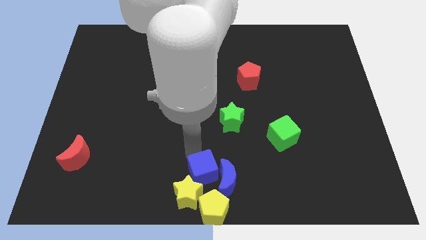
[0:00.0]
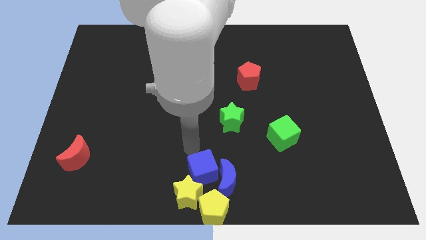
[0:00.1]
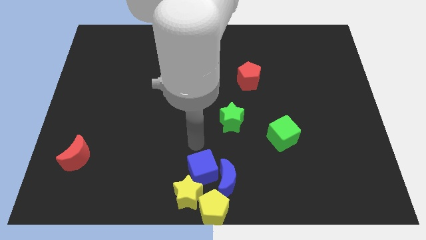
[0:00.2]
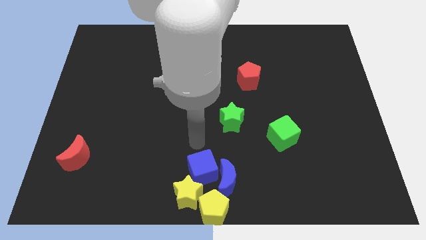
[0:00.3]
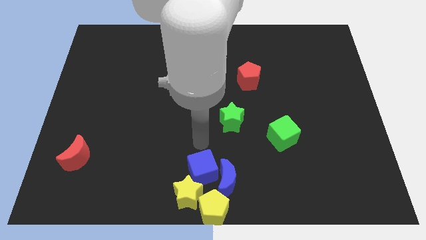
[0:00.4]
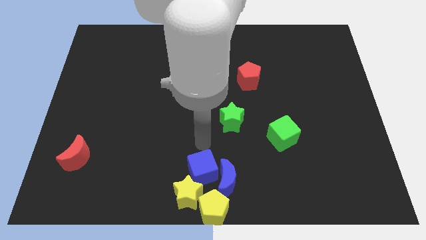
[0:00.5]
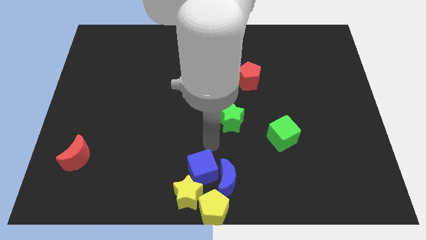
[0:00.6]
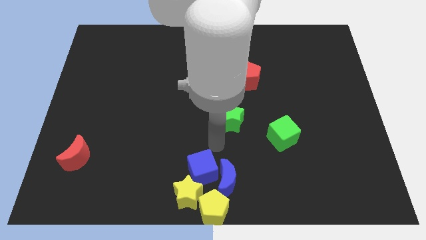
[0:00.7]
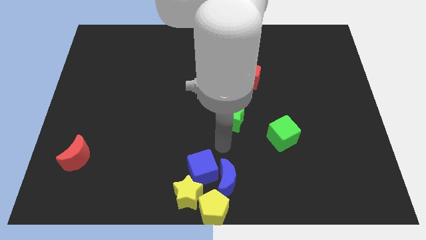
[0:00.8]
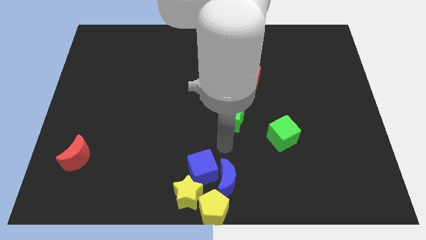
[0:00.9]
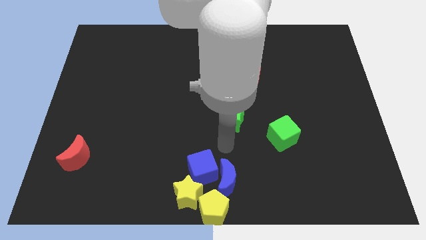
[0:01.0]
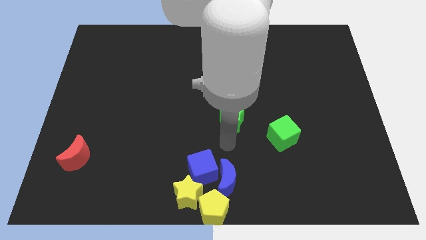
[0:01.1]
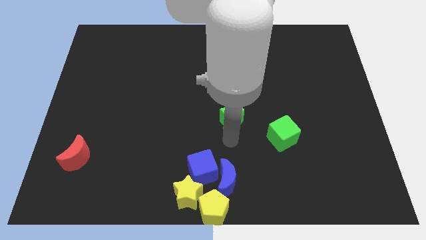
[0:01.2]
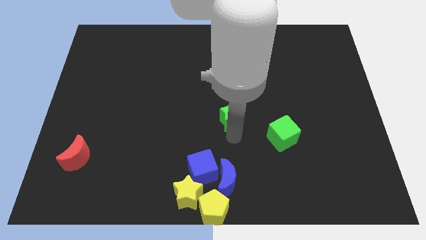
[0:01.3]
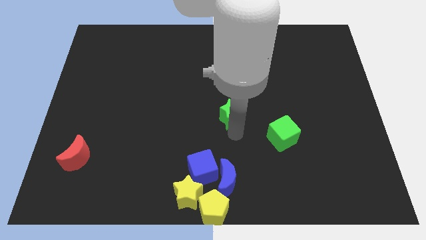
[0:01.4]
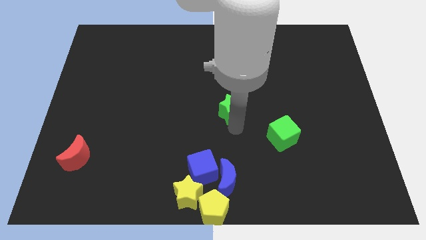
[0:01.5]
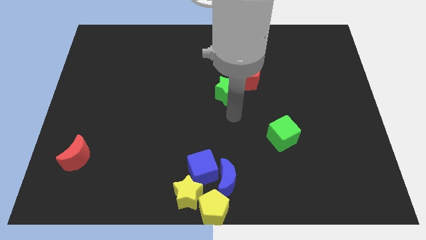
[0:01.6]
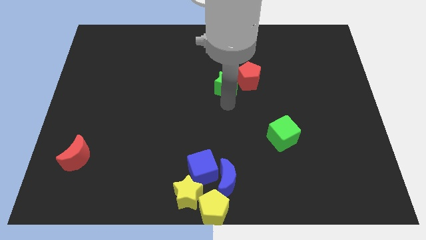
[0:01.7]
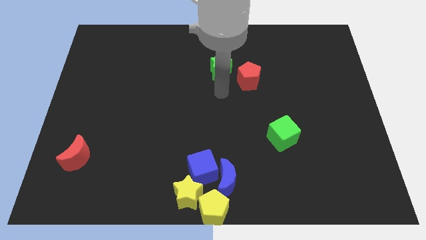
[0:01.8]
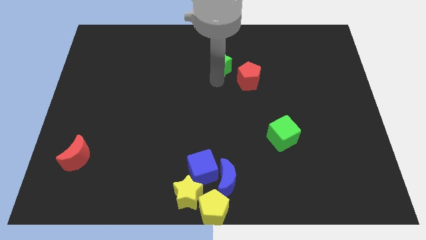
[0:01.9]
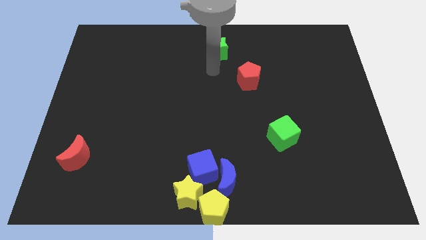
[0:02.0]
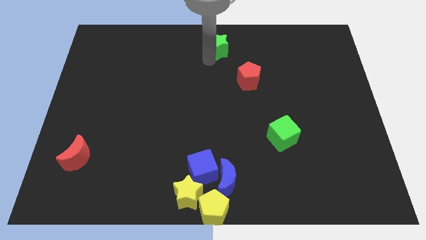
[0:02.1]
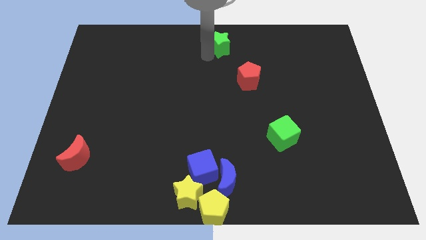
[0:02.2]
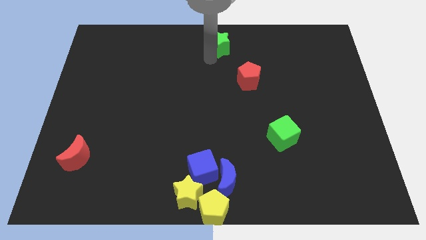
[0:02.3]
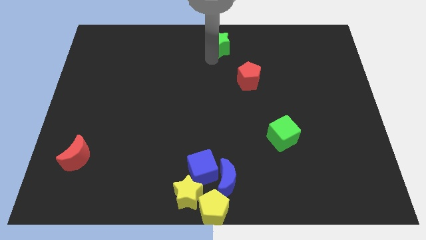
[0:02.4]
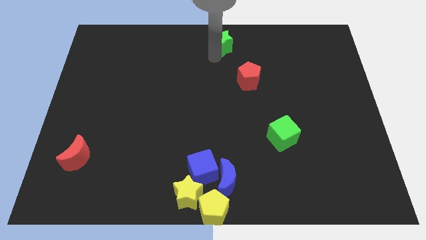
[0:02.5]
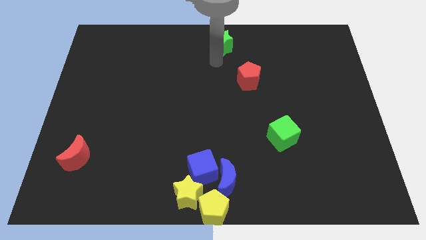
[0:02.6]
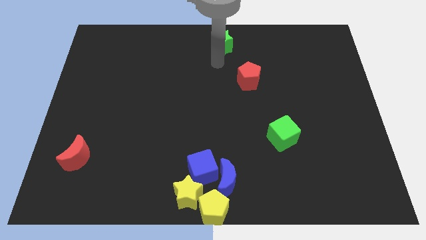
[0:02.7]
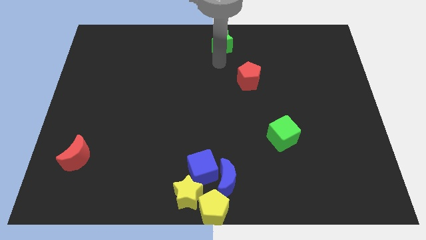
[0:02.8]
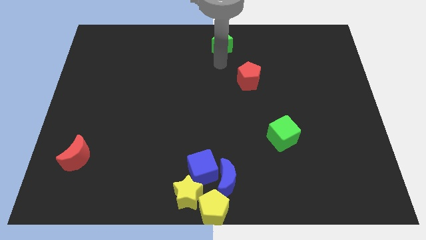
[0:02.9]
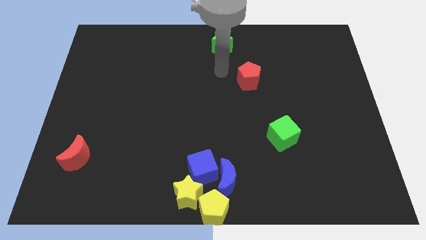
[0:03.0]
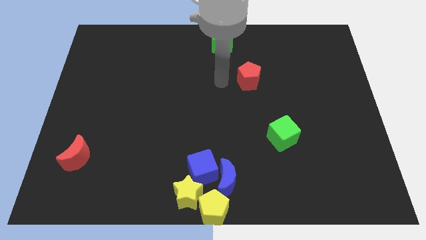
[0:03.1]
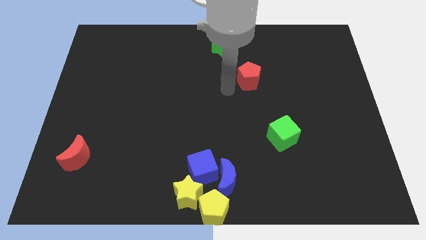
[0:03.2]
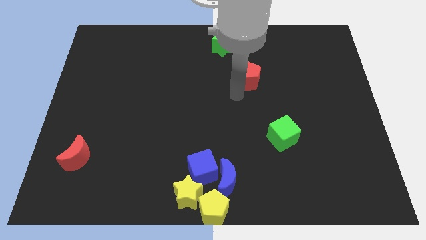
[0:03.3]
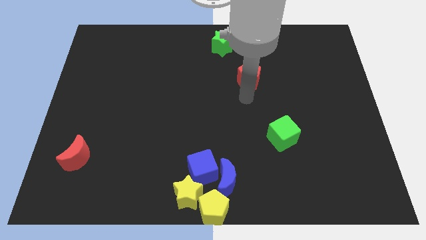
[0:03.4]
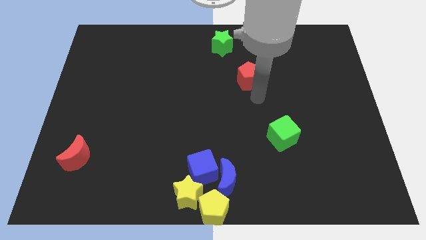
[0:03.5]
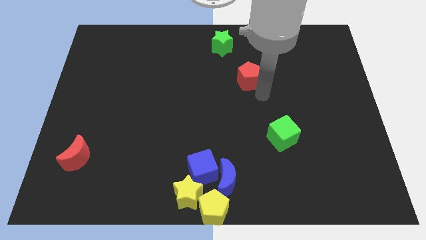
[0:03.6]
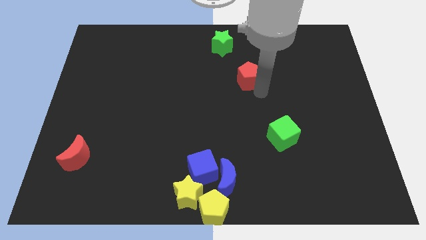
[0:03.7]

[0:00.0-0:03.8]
push the green star slightly towards the top center of the board

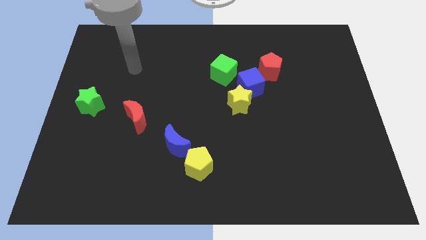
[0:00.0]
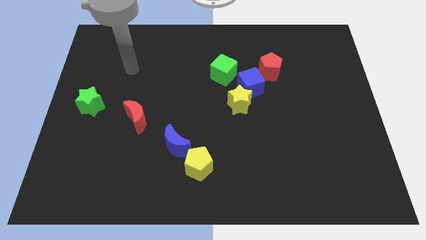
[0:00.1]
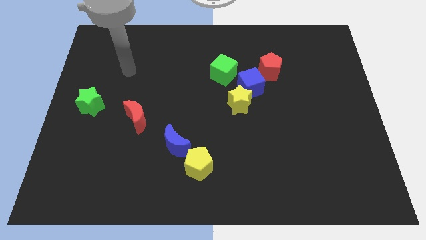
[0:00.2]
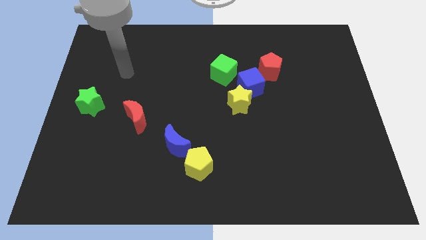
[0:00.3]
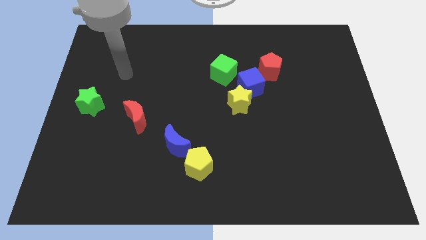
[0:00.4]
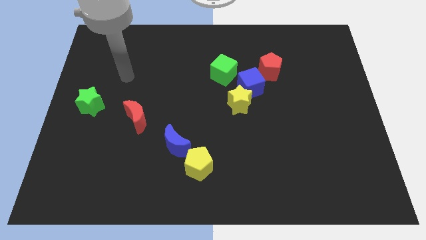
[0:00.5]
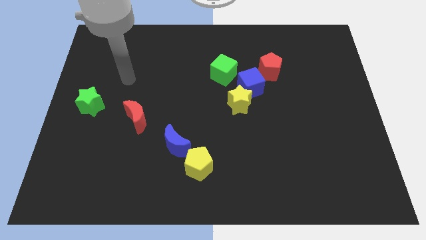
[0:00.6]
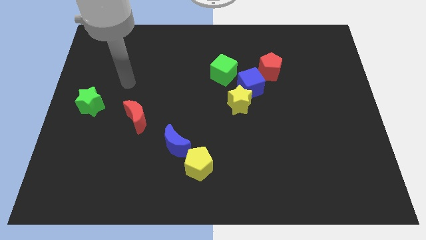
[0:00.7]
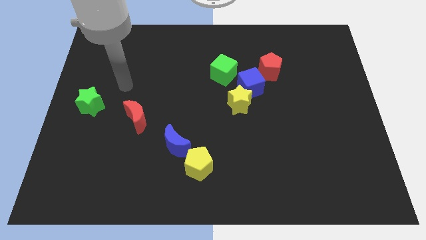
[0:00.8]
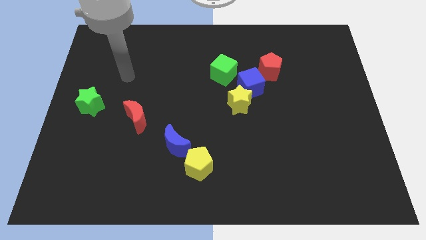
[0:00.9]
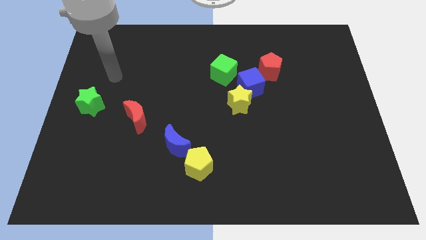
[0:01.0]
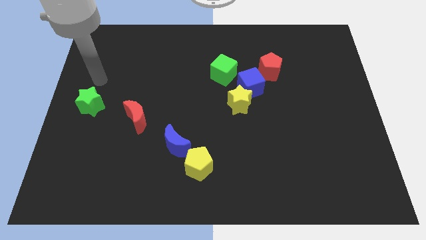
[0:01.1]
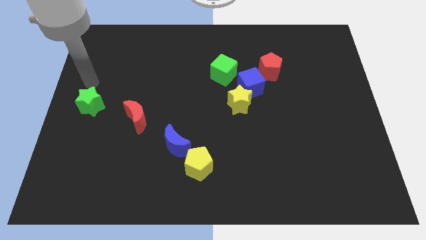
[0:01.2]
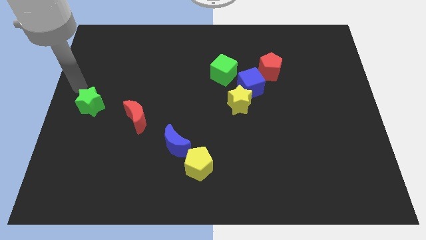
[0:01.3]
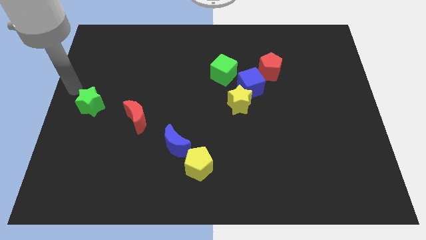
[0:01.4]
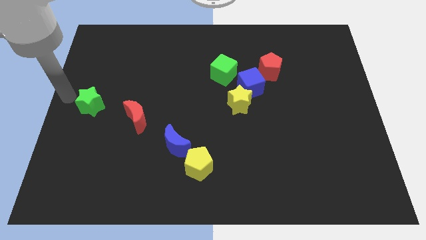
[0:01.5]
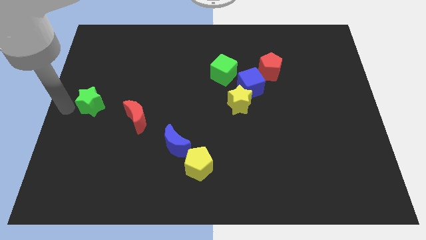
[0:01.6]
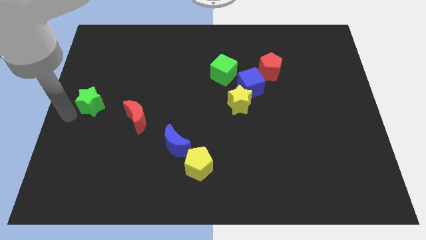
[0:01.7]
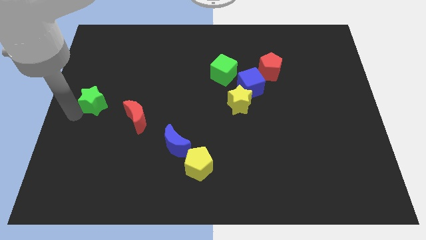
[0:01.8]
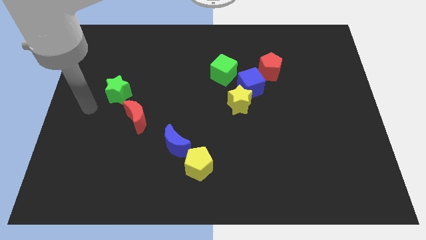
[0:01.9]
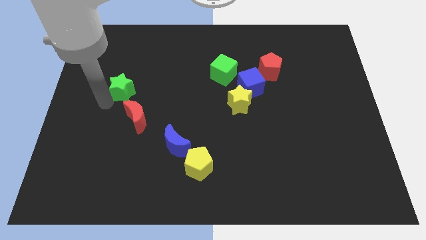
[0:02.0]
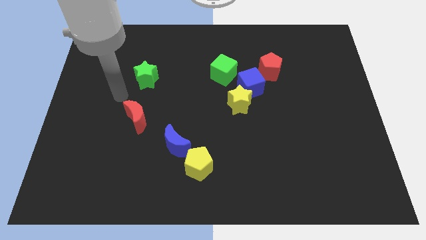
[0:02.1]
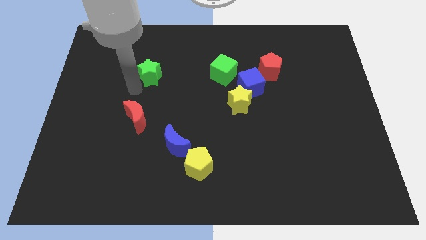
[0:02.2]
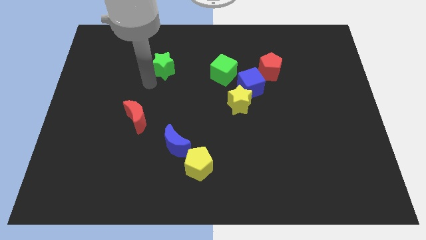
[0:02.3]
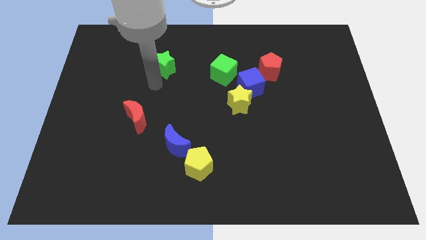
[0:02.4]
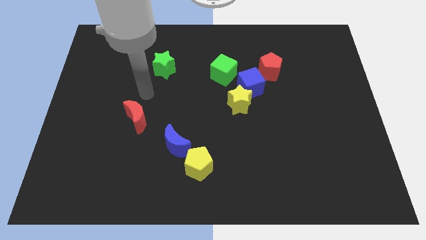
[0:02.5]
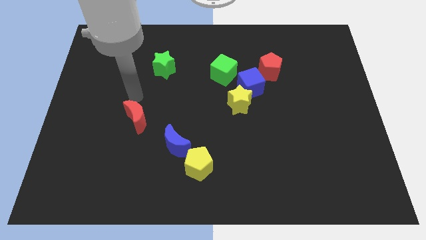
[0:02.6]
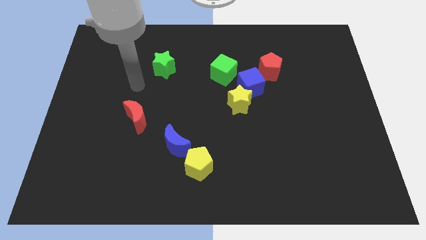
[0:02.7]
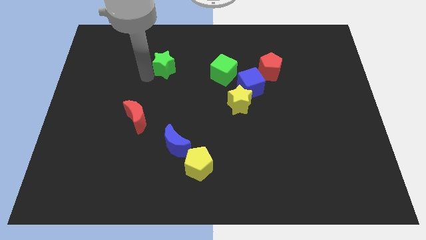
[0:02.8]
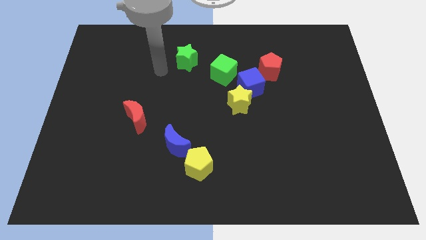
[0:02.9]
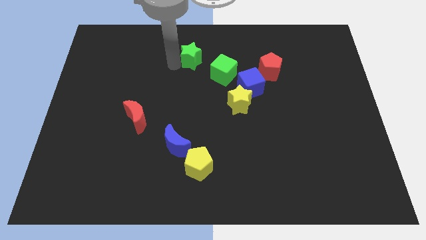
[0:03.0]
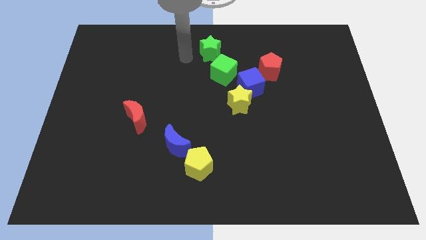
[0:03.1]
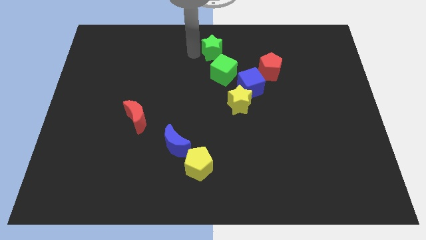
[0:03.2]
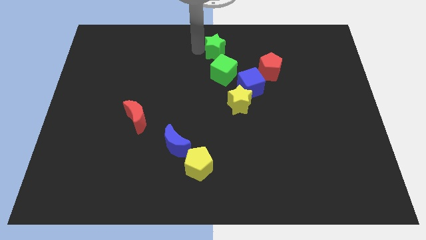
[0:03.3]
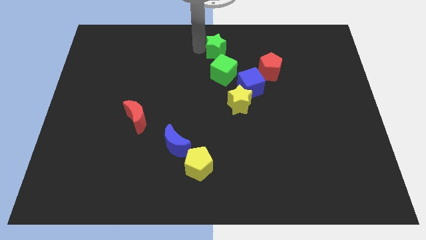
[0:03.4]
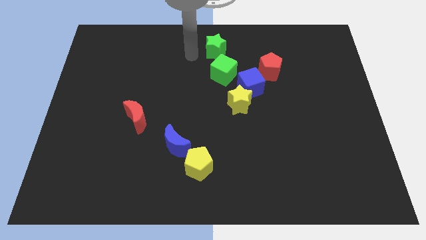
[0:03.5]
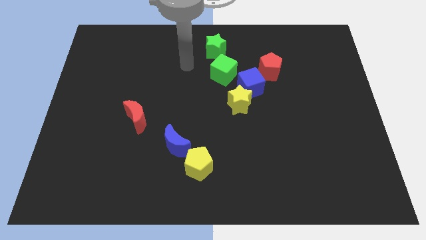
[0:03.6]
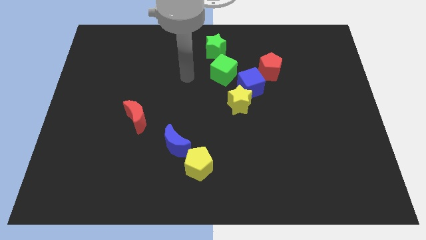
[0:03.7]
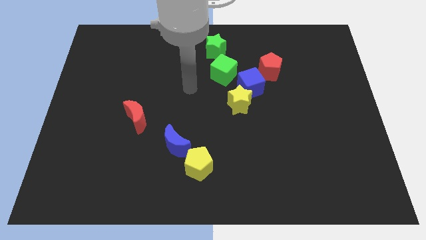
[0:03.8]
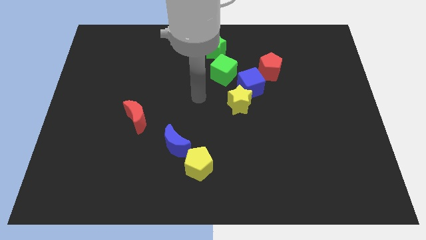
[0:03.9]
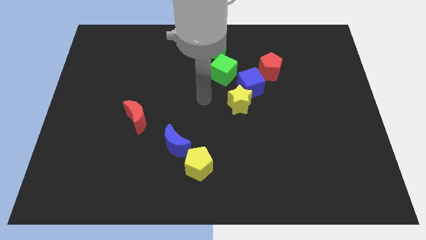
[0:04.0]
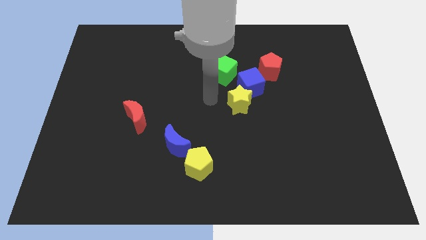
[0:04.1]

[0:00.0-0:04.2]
push the green star to the top center of the board

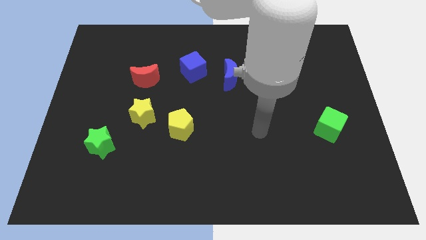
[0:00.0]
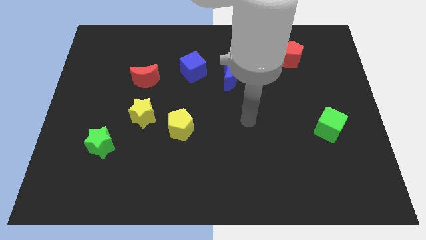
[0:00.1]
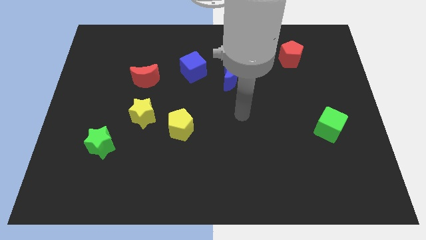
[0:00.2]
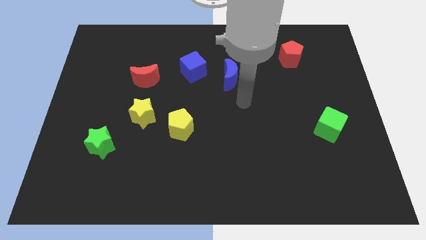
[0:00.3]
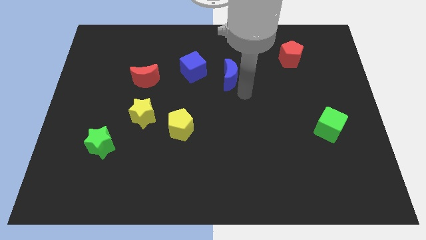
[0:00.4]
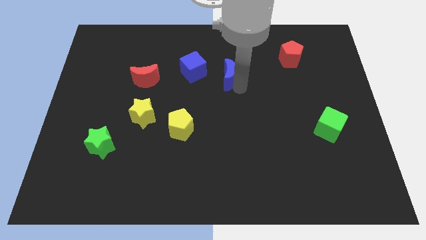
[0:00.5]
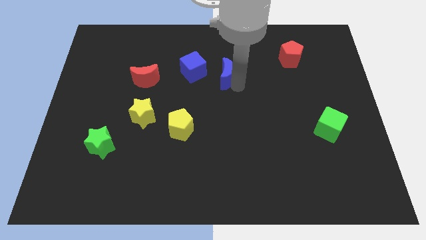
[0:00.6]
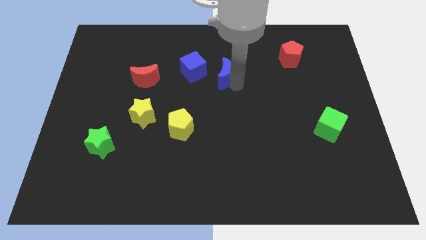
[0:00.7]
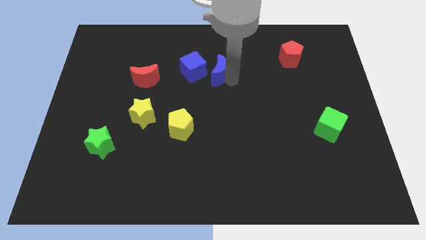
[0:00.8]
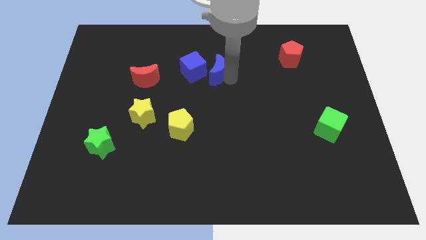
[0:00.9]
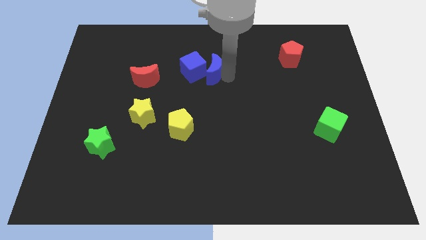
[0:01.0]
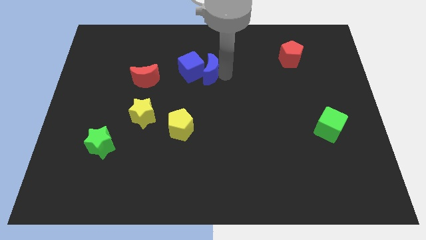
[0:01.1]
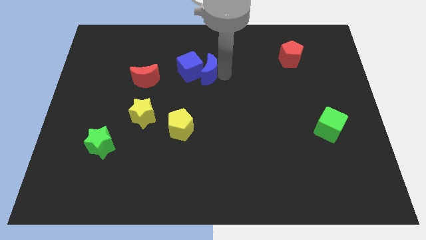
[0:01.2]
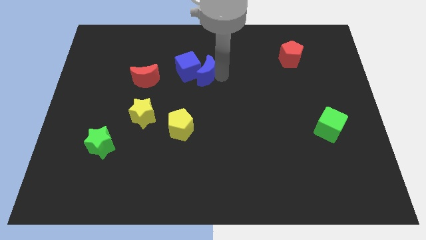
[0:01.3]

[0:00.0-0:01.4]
move blue moon into blue cube
